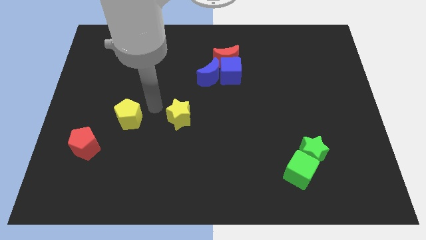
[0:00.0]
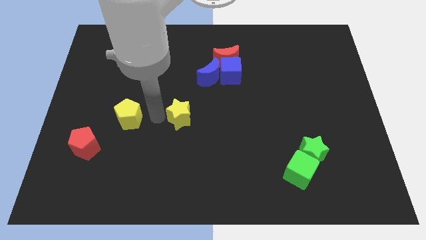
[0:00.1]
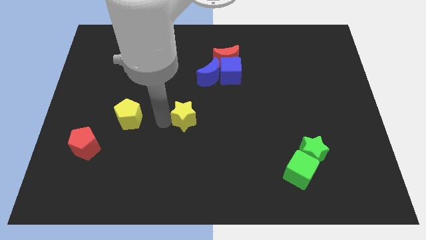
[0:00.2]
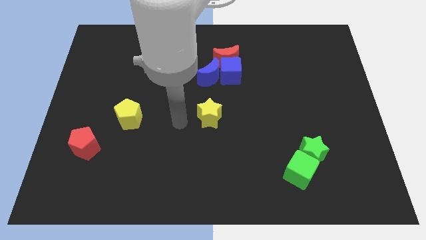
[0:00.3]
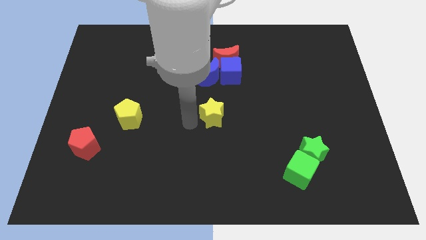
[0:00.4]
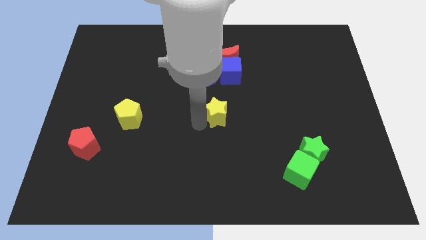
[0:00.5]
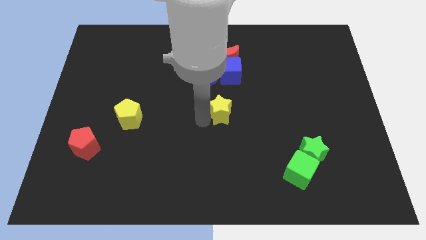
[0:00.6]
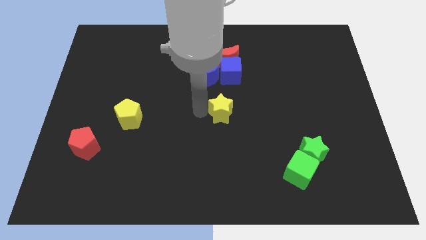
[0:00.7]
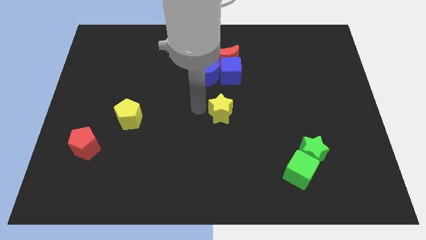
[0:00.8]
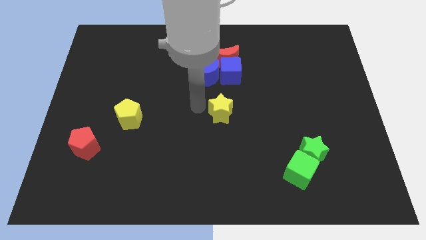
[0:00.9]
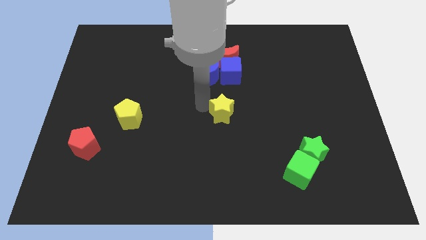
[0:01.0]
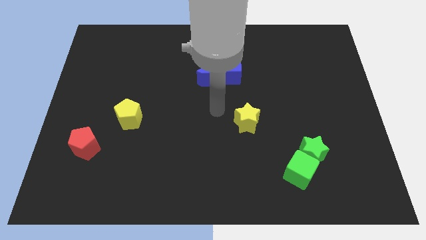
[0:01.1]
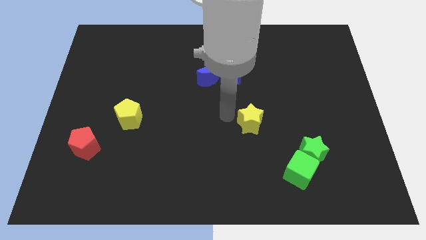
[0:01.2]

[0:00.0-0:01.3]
push the yellow star towards the group of green blocks

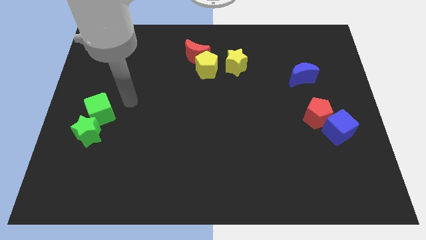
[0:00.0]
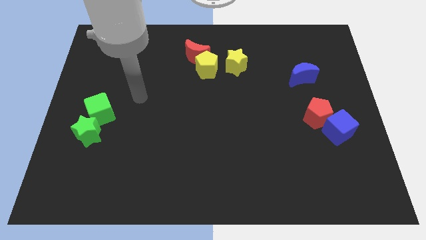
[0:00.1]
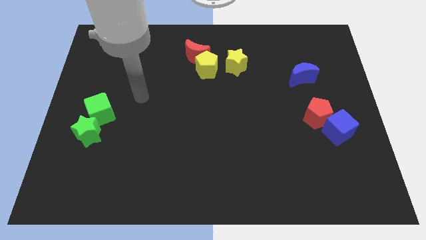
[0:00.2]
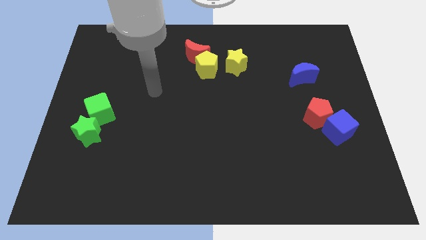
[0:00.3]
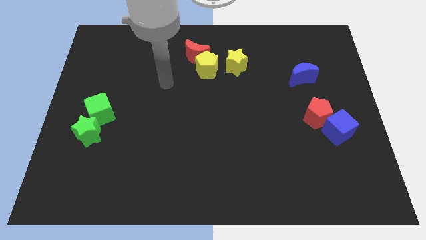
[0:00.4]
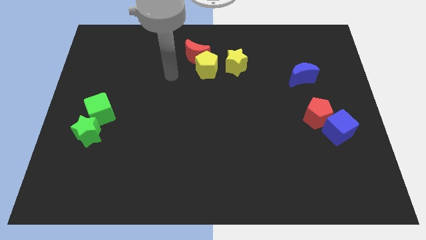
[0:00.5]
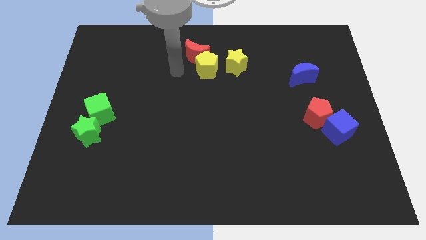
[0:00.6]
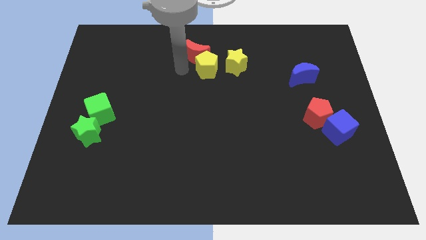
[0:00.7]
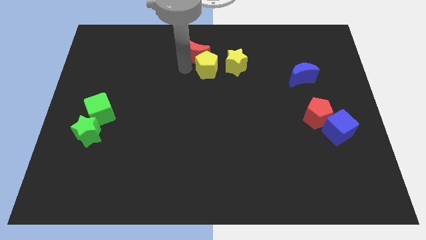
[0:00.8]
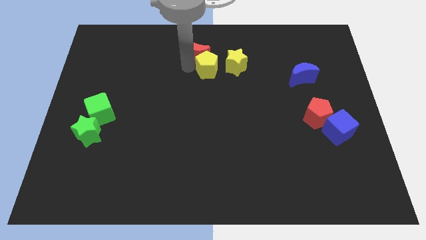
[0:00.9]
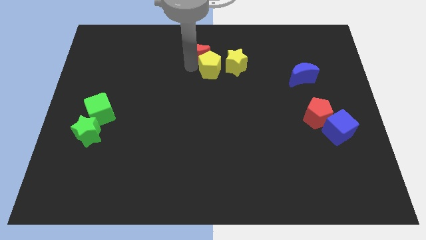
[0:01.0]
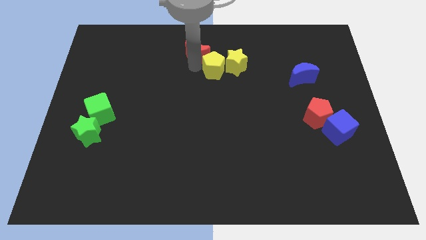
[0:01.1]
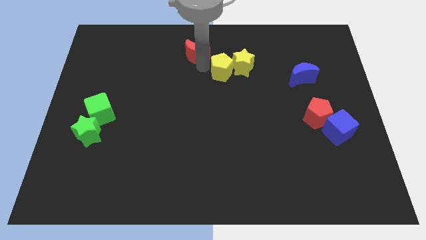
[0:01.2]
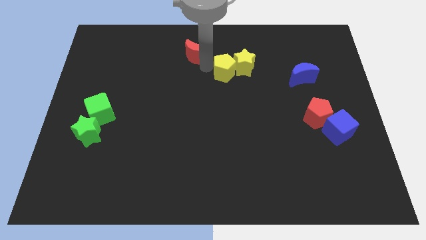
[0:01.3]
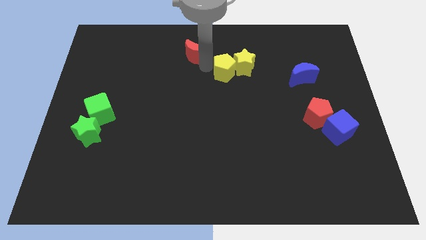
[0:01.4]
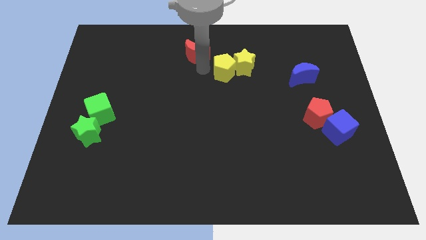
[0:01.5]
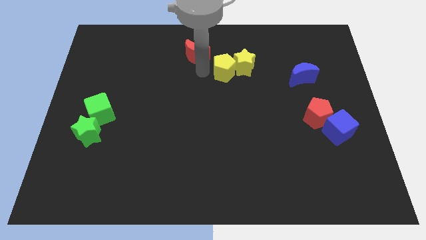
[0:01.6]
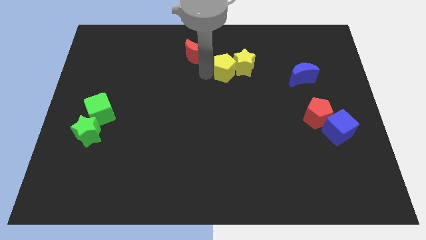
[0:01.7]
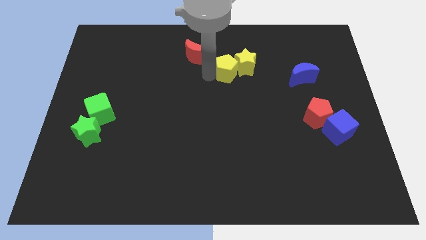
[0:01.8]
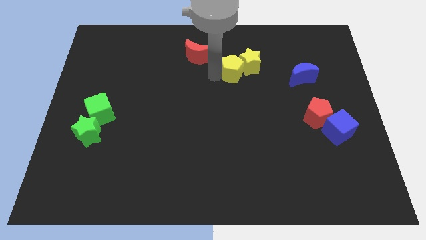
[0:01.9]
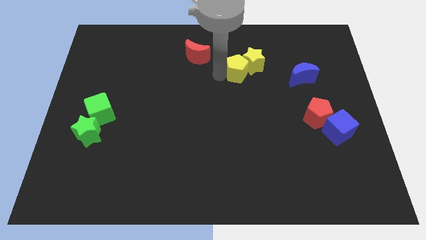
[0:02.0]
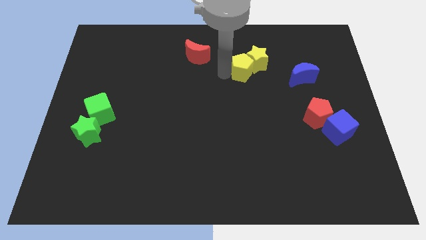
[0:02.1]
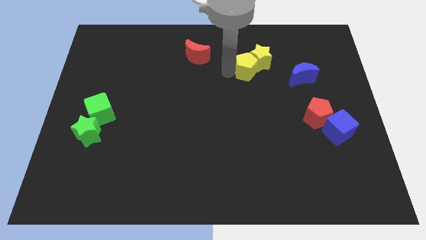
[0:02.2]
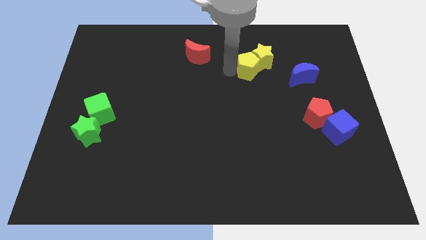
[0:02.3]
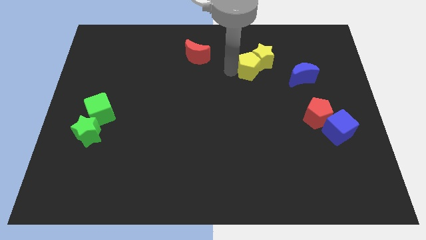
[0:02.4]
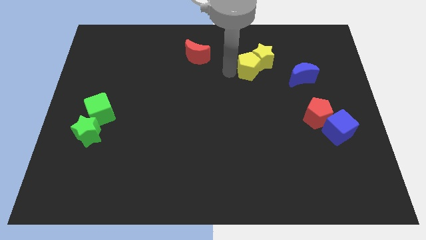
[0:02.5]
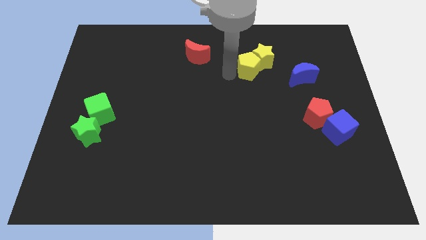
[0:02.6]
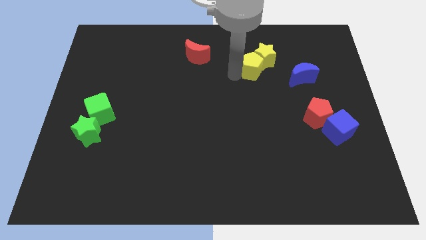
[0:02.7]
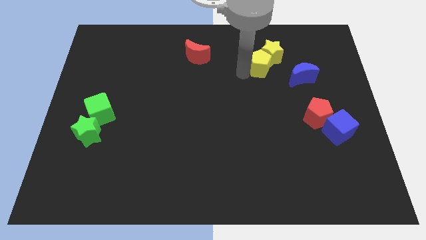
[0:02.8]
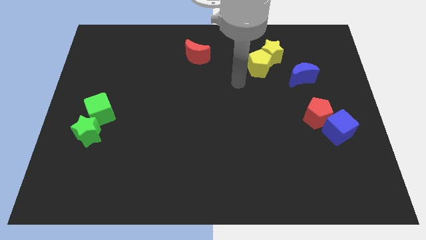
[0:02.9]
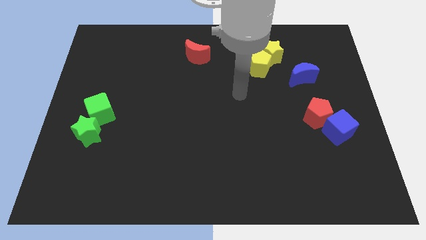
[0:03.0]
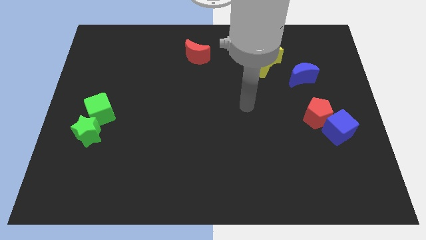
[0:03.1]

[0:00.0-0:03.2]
push both the yellow blocks to wards the top right side of the board

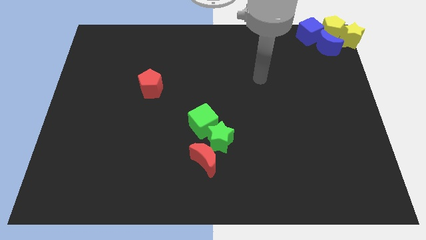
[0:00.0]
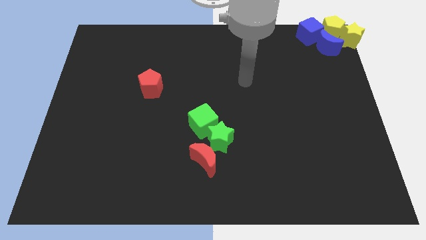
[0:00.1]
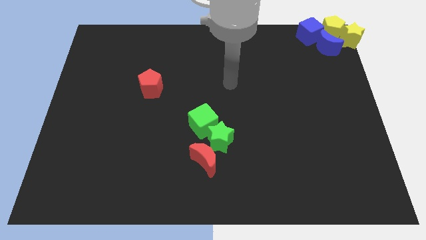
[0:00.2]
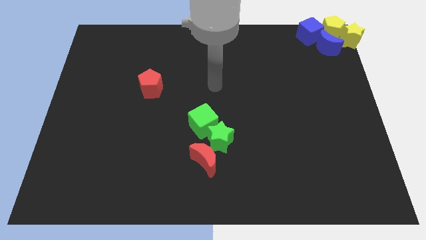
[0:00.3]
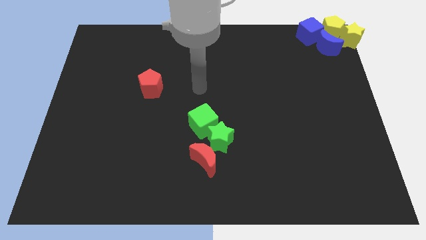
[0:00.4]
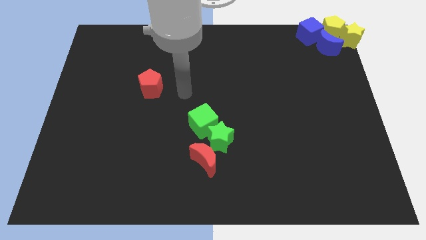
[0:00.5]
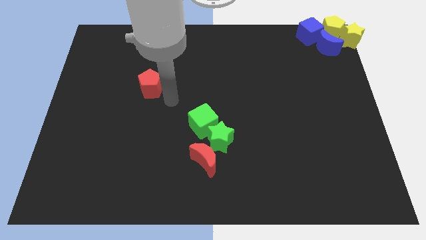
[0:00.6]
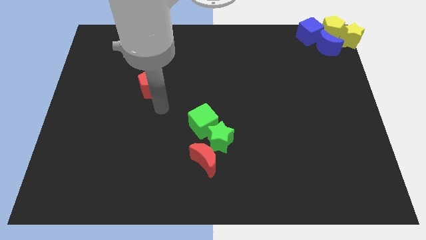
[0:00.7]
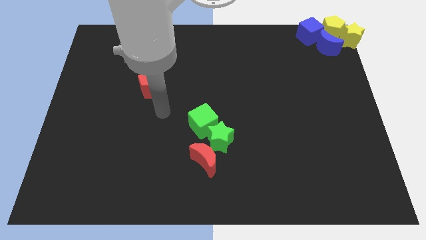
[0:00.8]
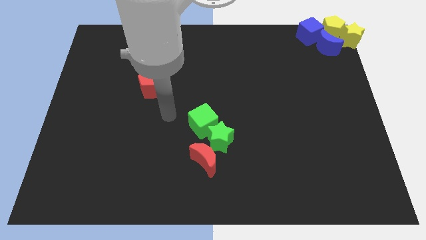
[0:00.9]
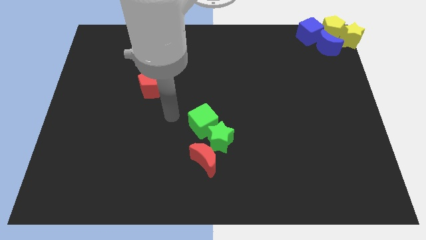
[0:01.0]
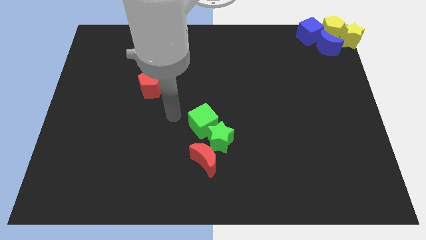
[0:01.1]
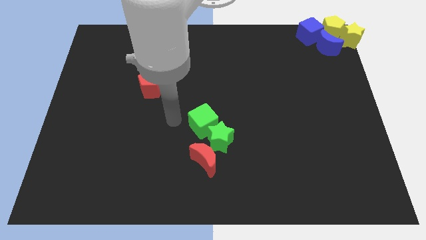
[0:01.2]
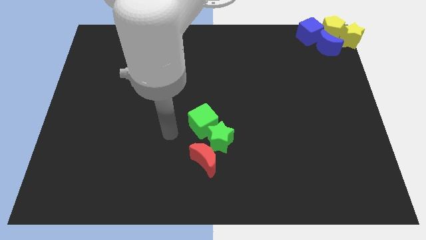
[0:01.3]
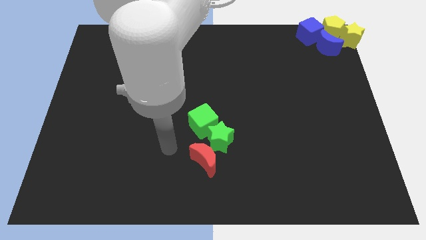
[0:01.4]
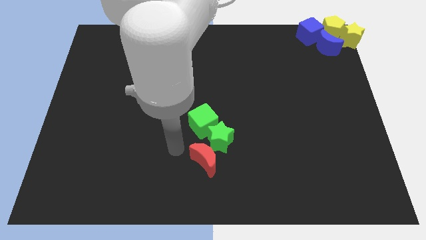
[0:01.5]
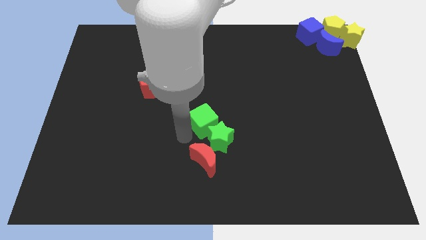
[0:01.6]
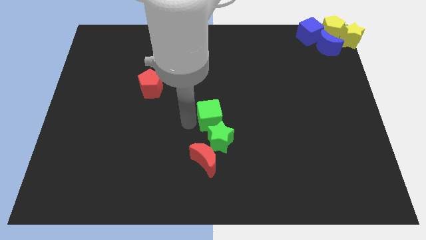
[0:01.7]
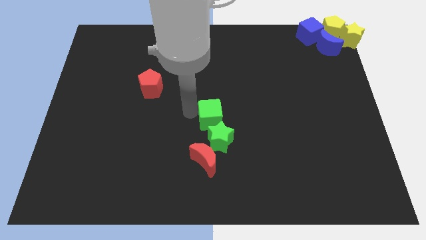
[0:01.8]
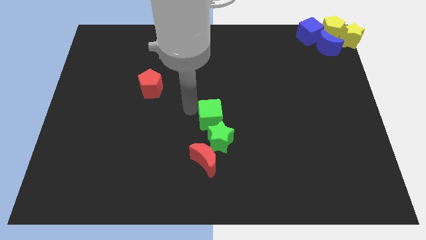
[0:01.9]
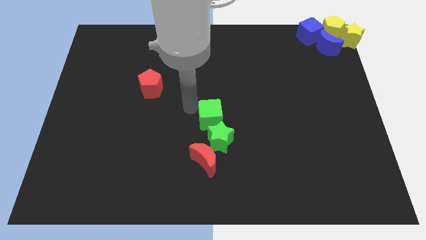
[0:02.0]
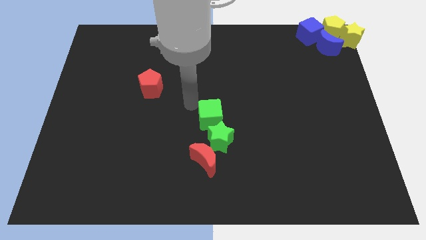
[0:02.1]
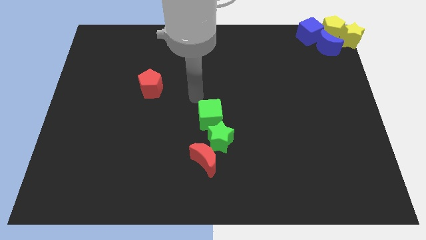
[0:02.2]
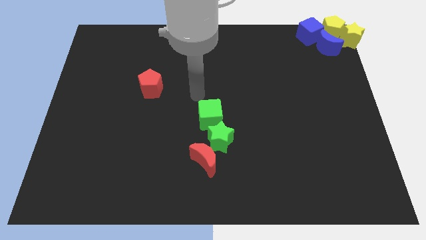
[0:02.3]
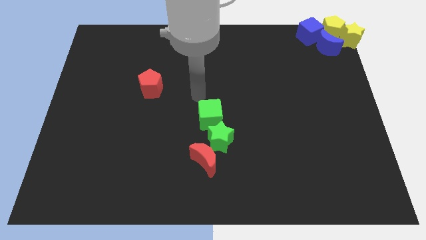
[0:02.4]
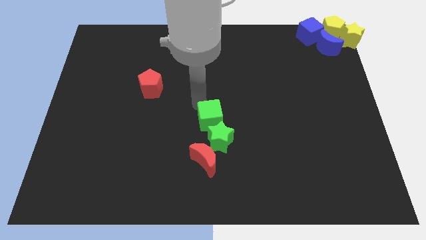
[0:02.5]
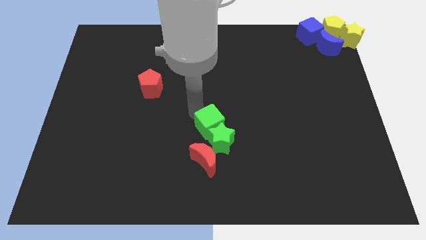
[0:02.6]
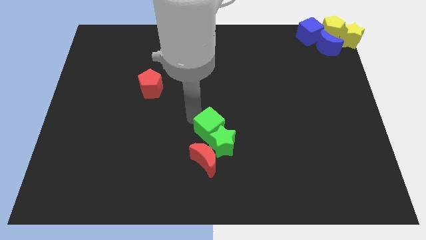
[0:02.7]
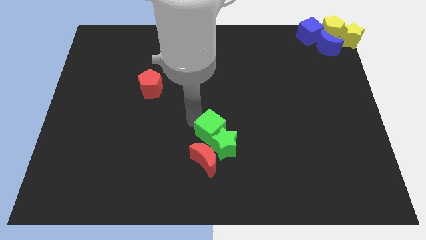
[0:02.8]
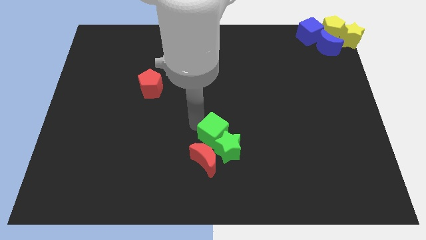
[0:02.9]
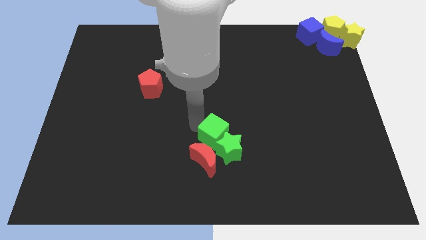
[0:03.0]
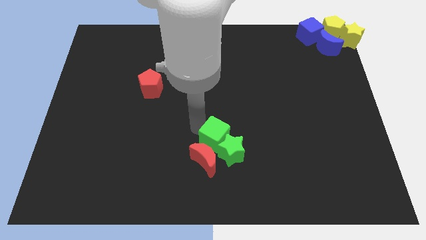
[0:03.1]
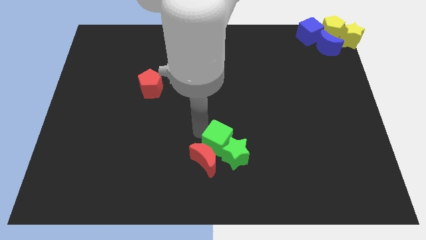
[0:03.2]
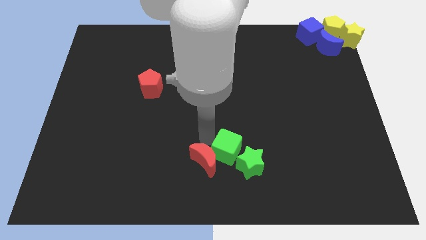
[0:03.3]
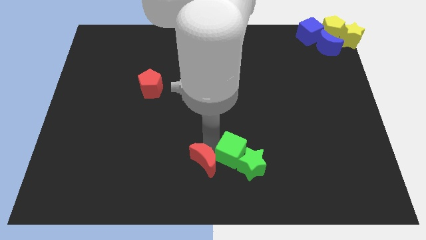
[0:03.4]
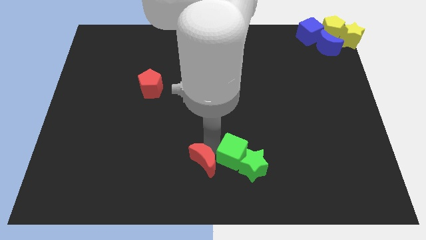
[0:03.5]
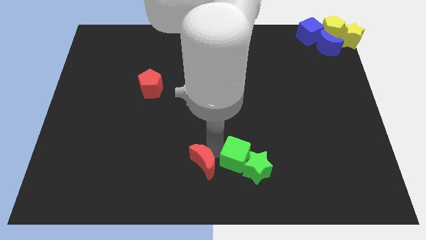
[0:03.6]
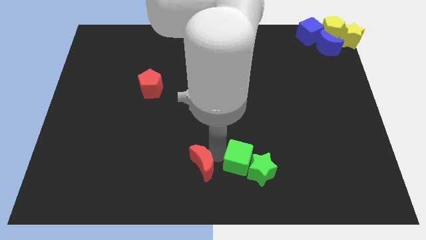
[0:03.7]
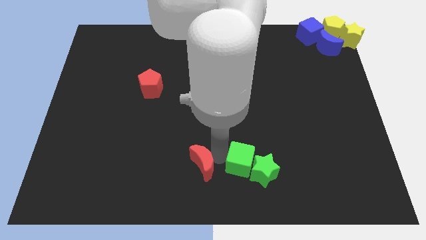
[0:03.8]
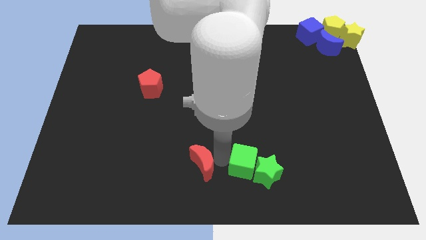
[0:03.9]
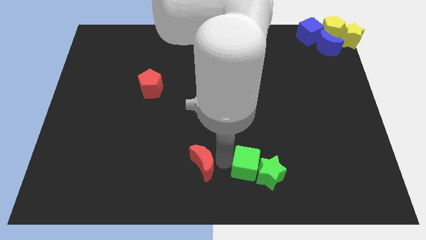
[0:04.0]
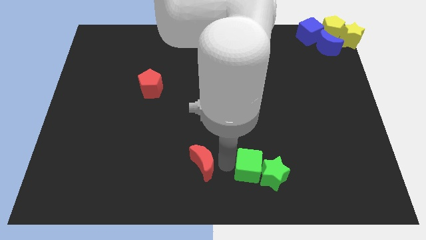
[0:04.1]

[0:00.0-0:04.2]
push the green cube into the green star

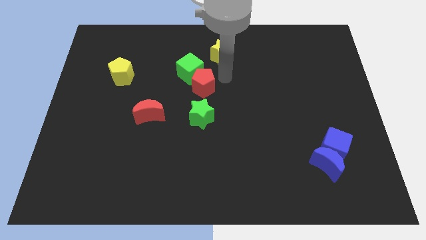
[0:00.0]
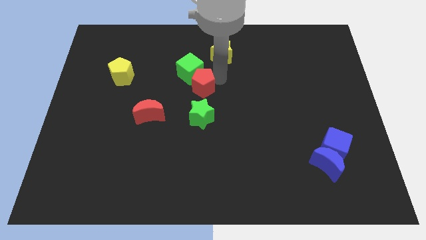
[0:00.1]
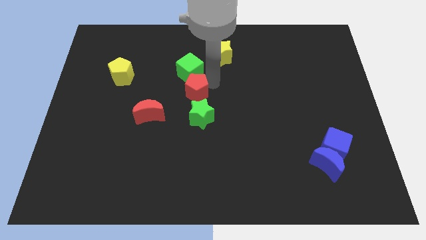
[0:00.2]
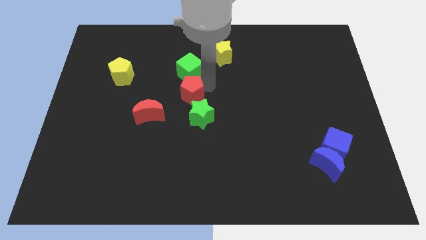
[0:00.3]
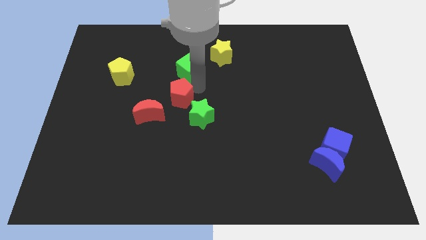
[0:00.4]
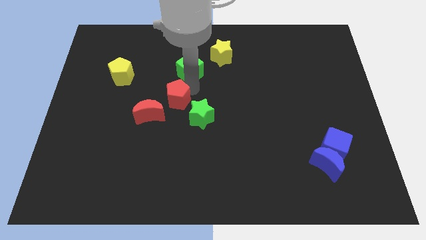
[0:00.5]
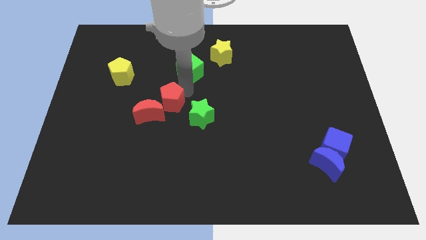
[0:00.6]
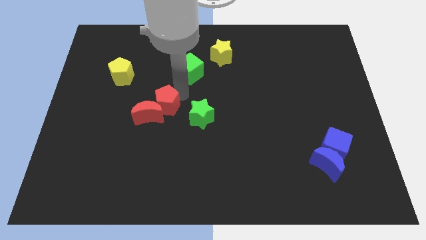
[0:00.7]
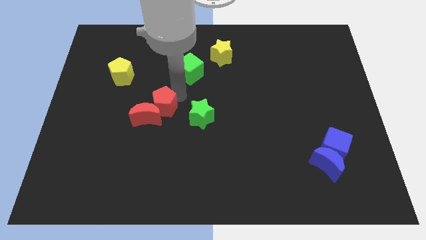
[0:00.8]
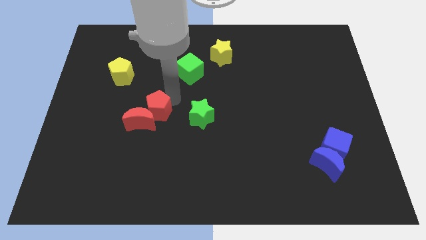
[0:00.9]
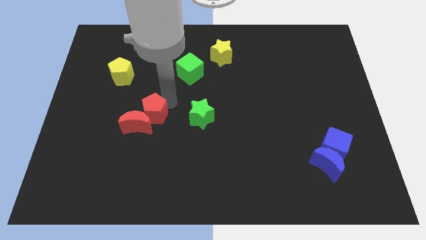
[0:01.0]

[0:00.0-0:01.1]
push the red pentagon into the red moon
